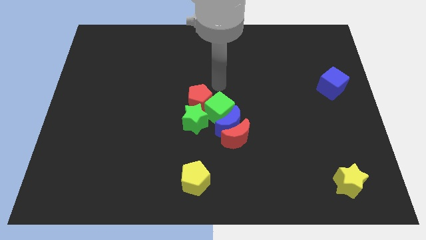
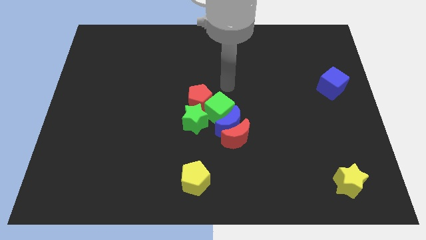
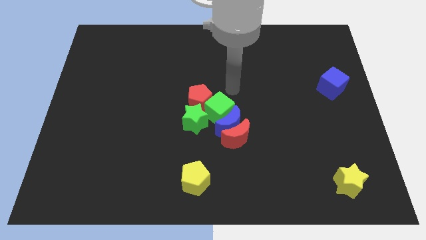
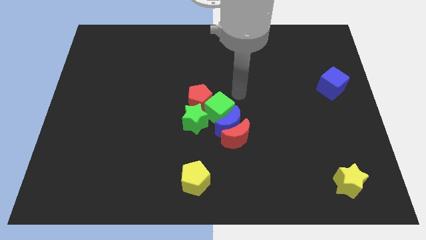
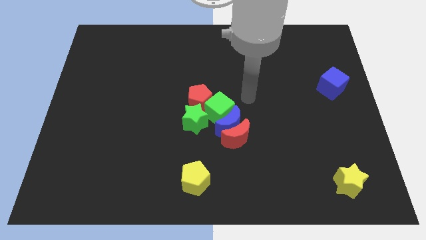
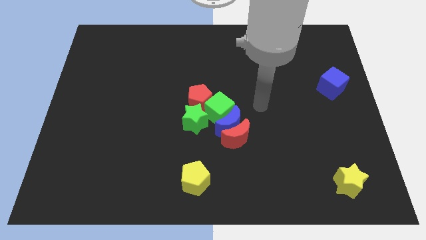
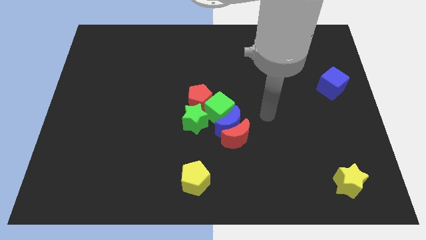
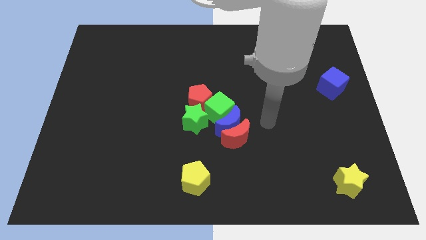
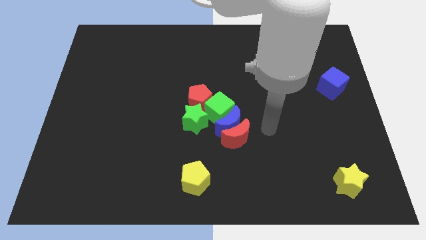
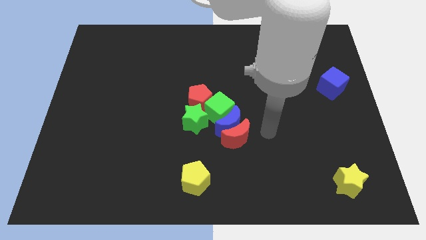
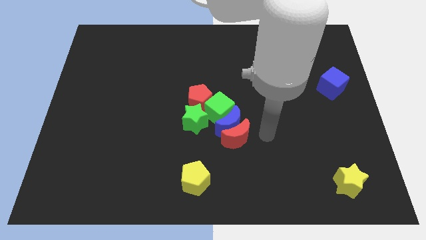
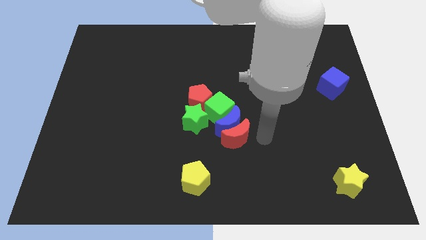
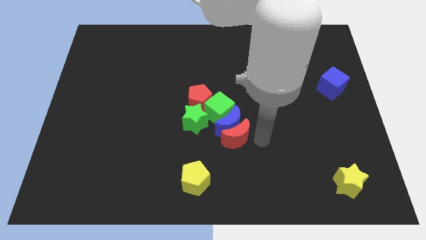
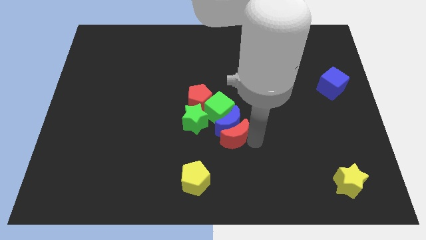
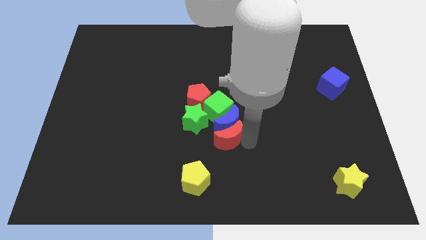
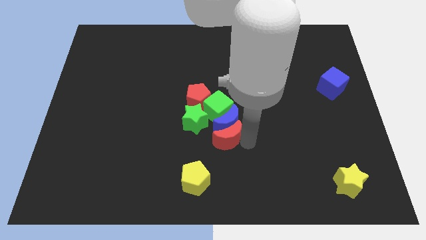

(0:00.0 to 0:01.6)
tap the red crescent

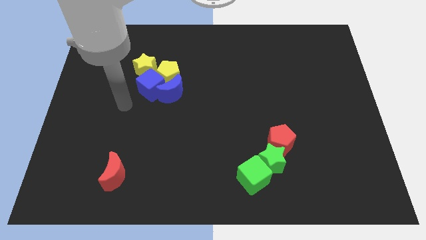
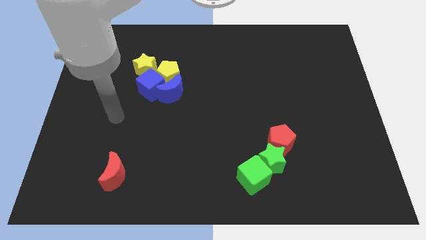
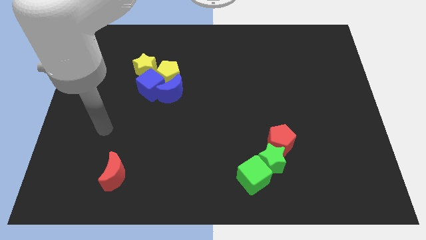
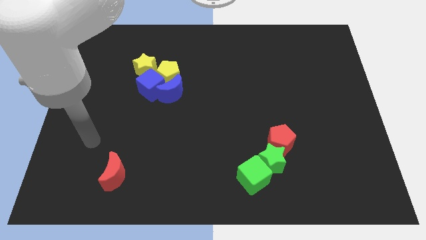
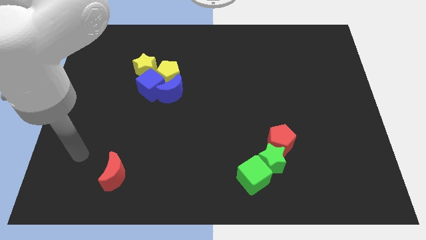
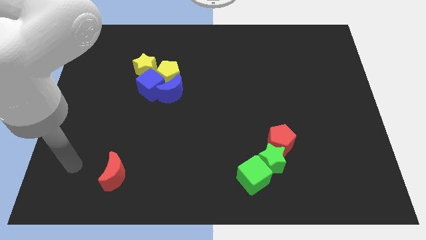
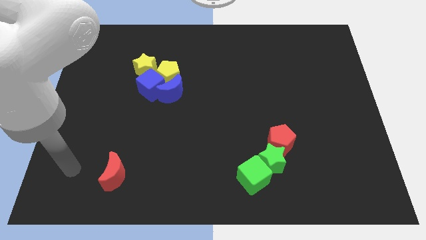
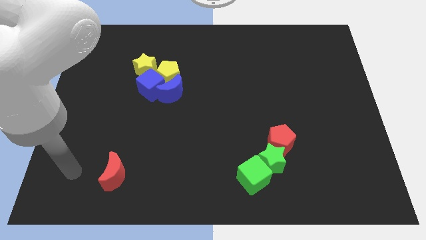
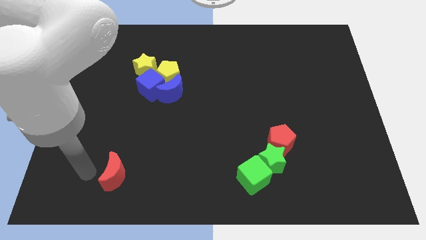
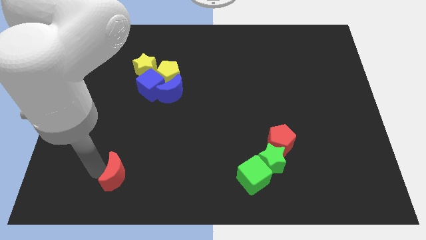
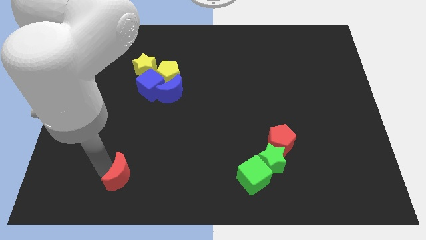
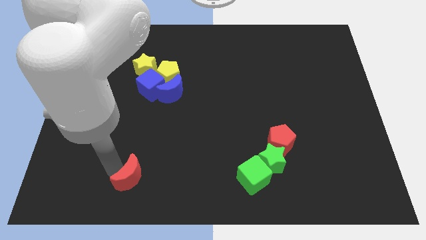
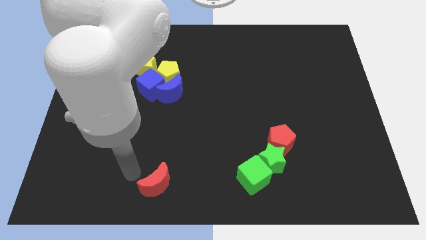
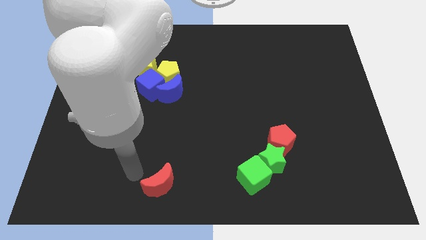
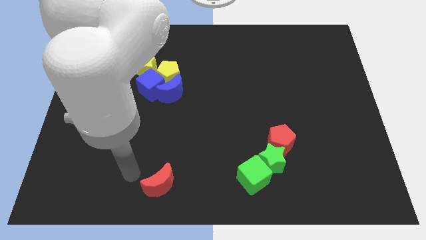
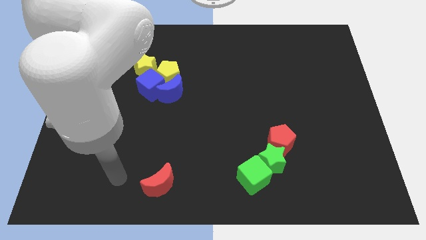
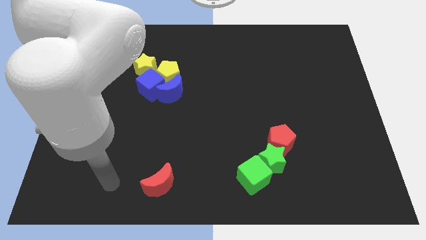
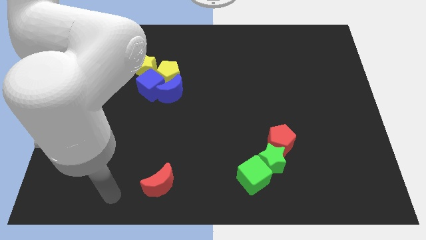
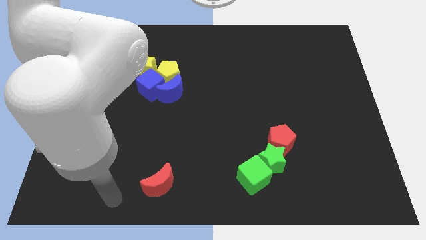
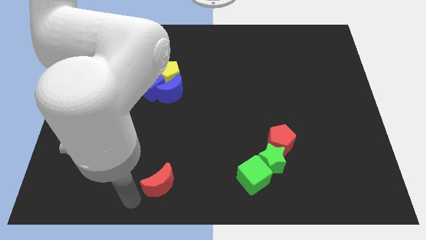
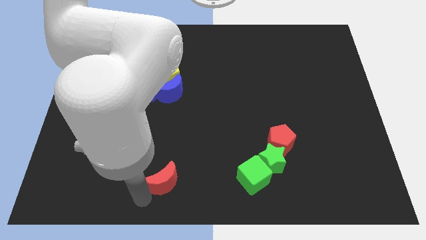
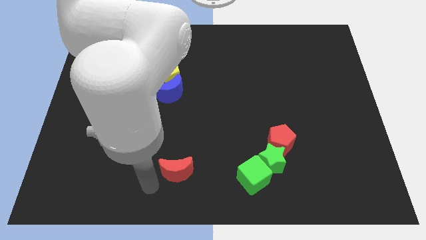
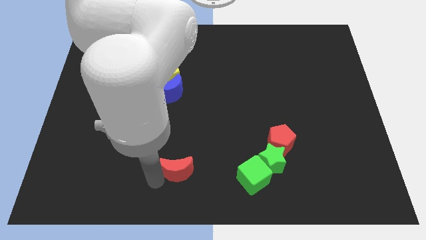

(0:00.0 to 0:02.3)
move the red moon to the left of green cube

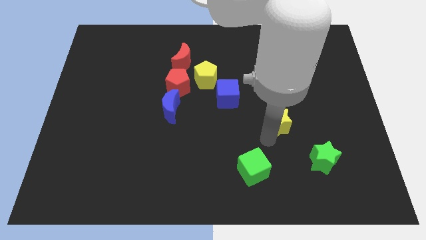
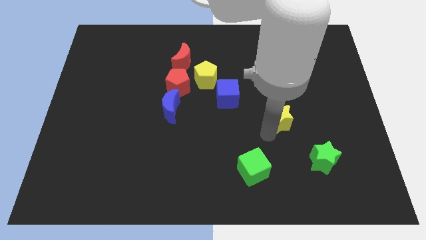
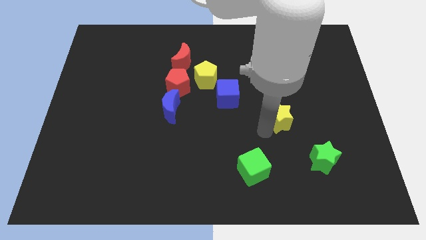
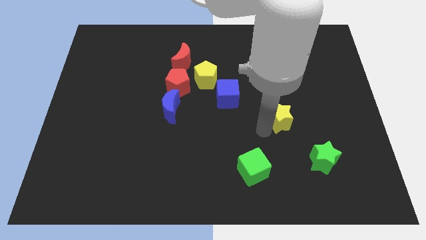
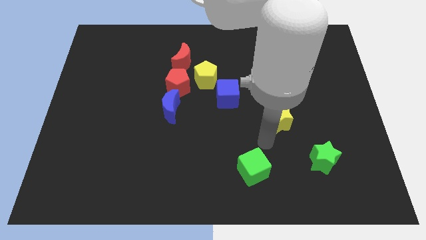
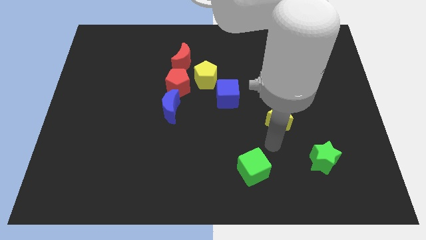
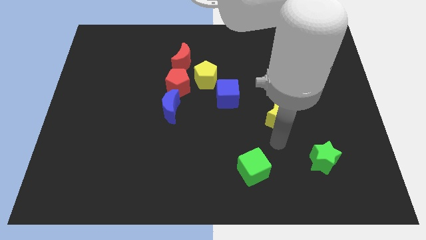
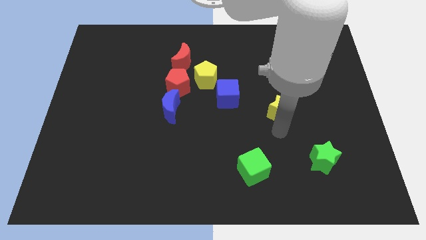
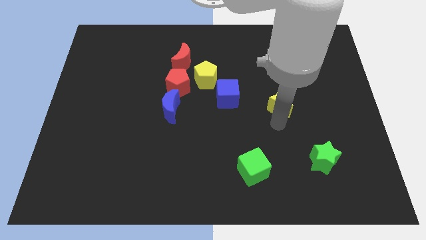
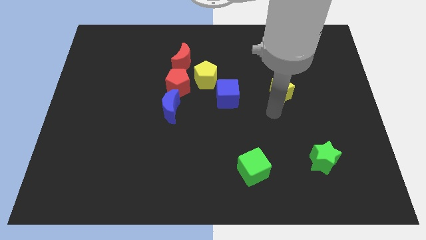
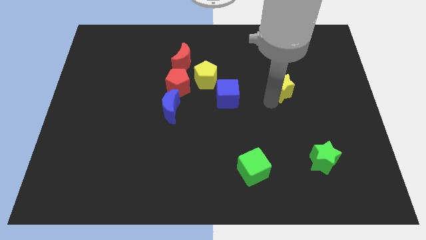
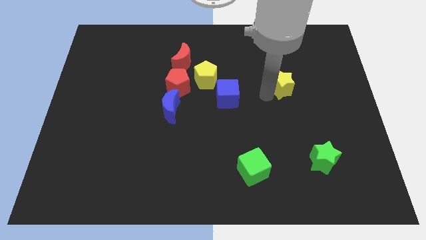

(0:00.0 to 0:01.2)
push the yellow star to the right of the blue cube

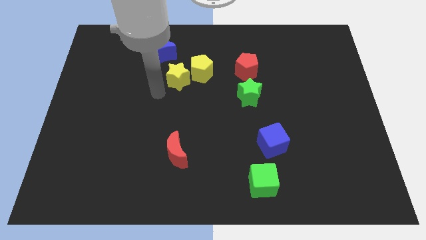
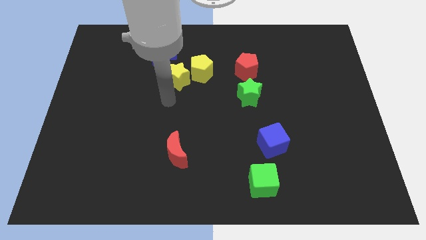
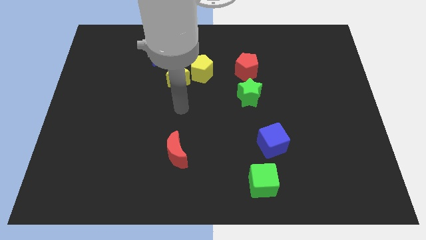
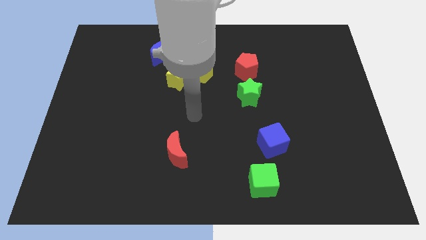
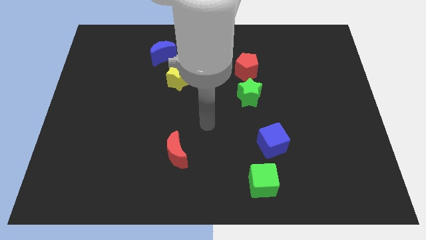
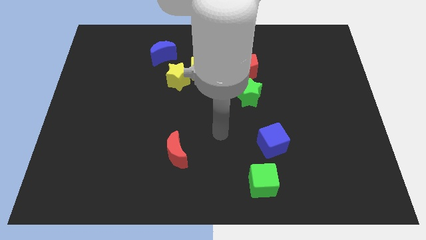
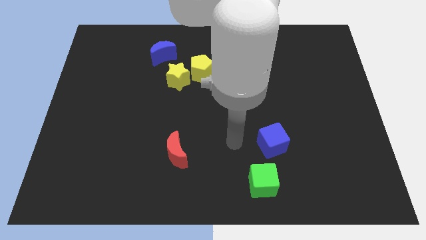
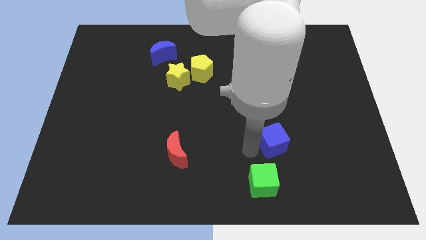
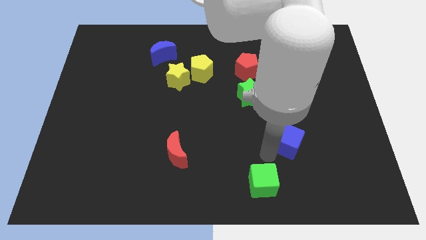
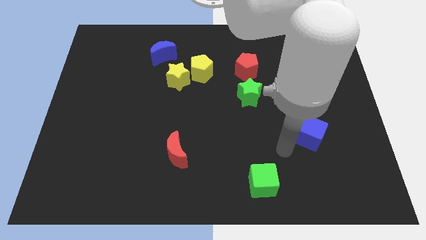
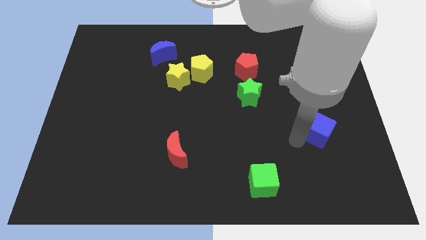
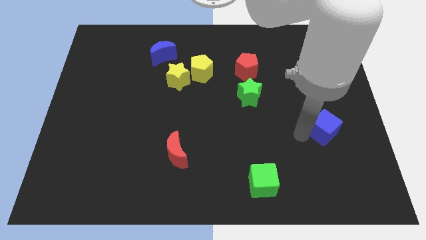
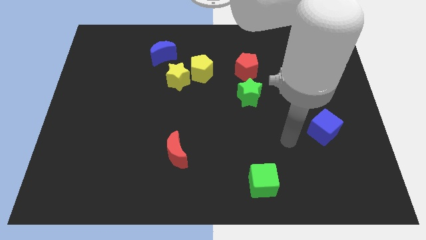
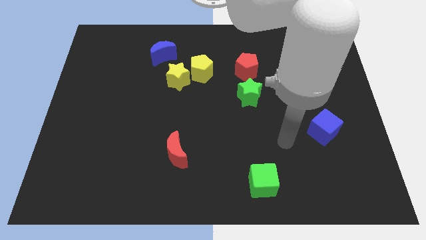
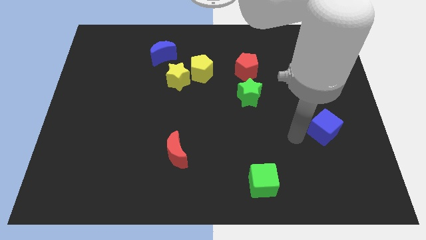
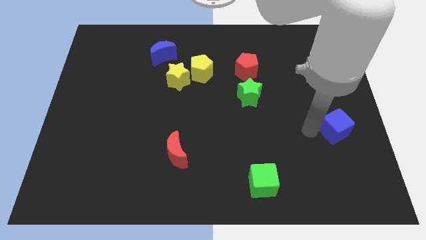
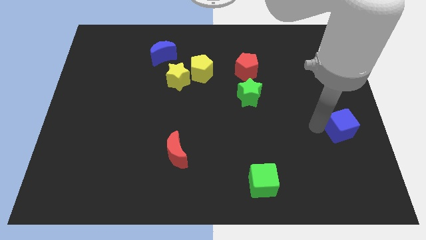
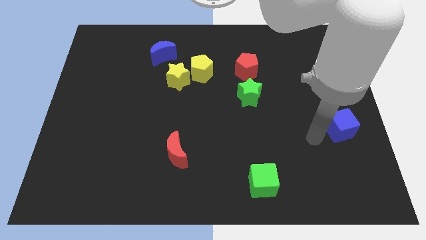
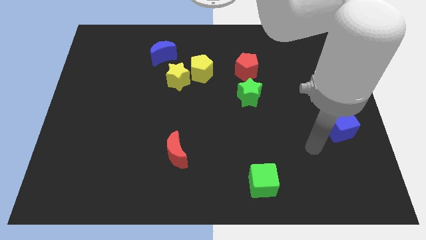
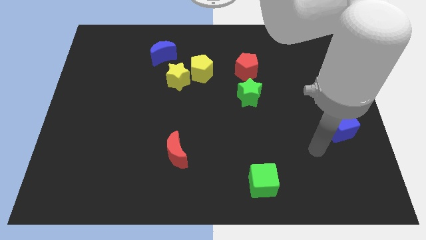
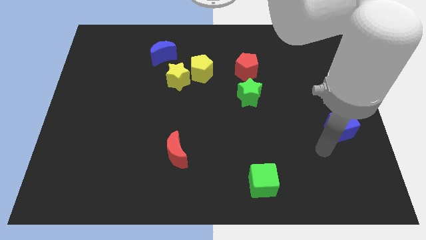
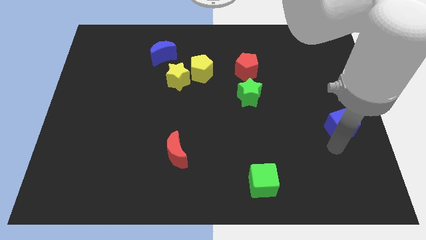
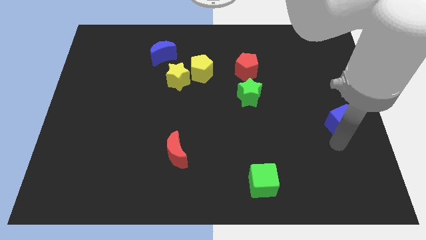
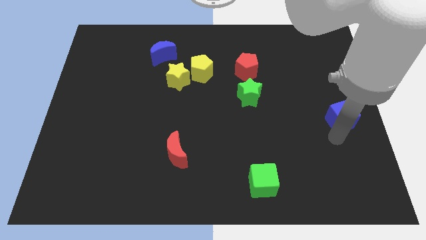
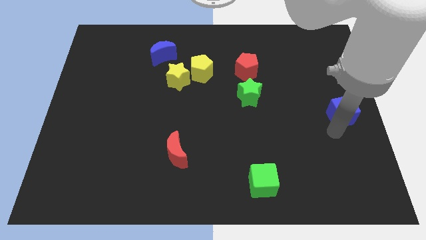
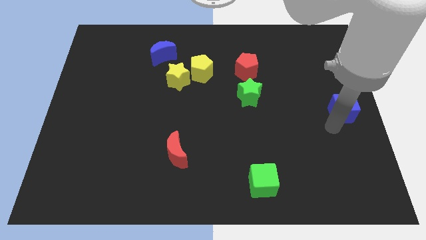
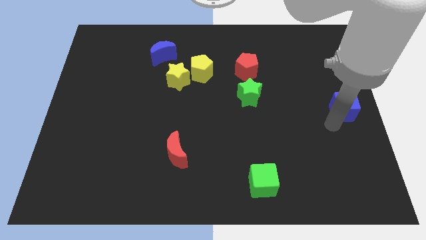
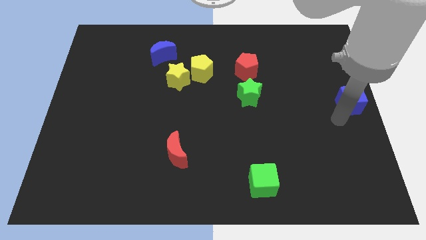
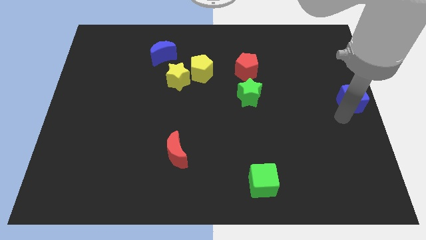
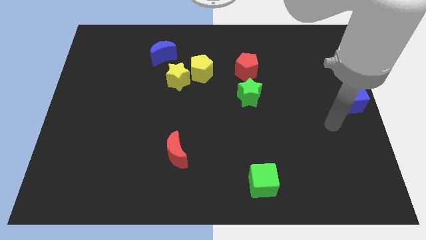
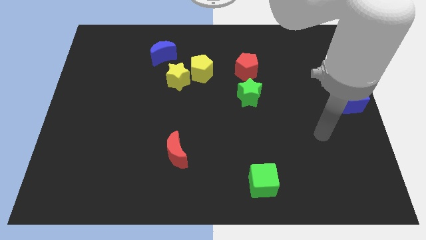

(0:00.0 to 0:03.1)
move the blue cube to the right center

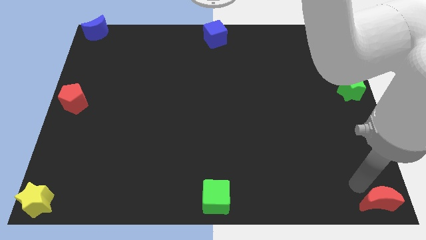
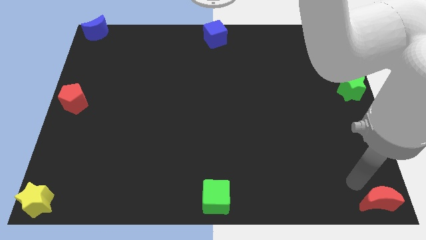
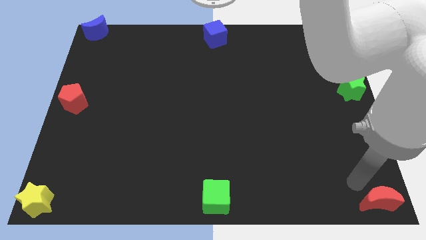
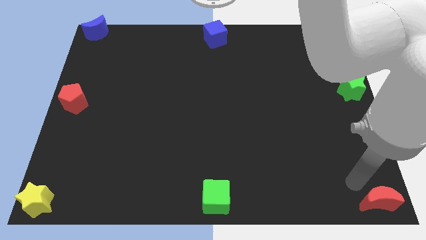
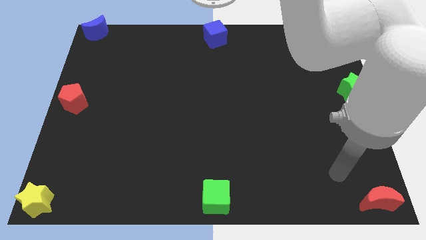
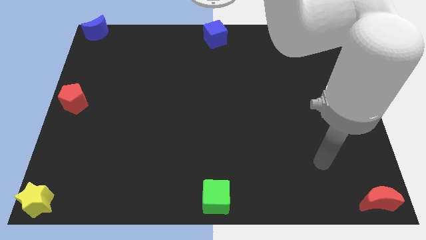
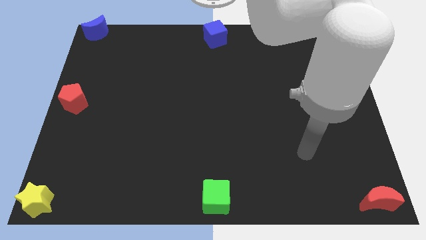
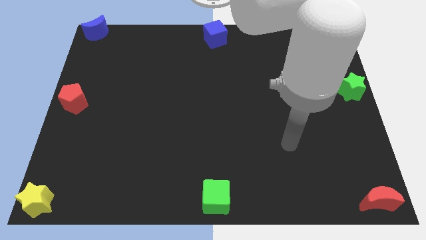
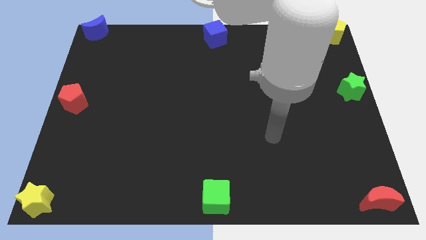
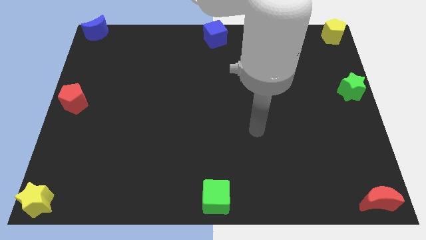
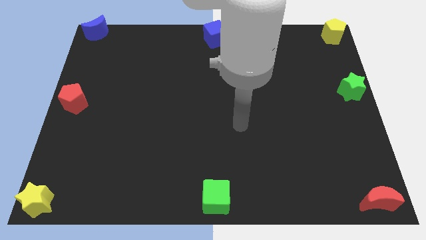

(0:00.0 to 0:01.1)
move your arm away from red moon
